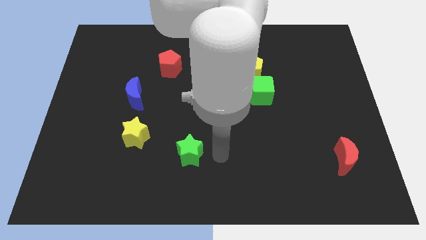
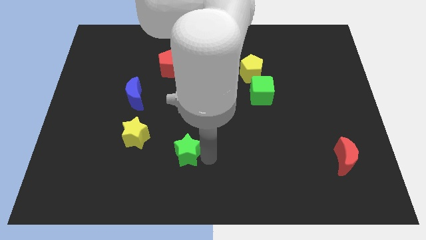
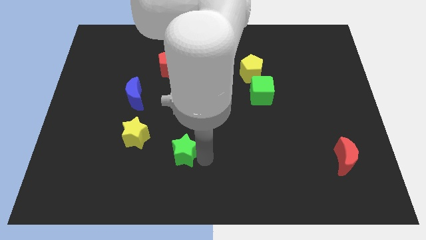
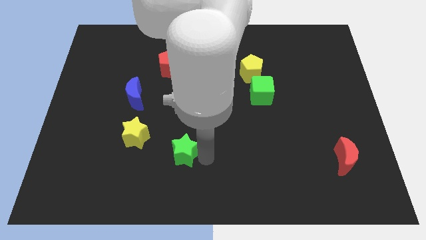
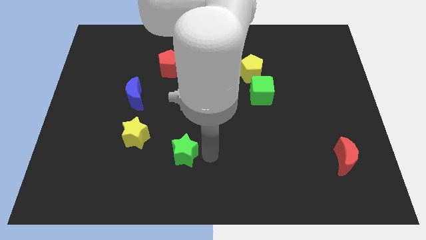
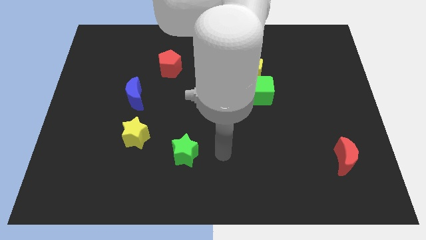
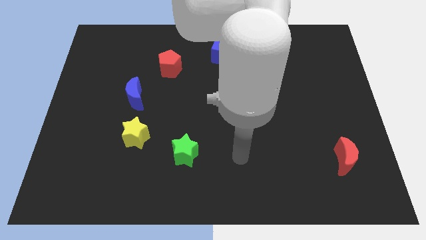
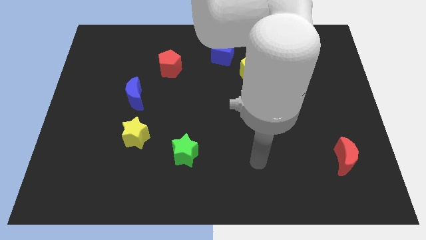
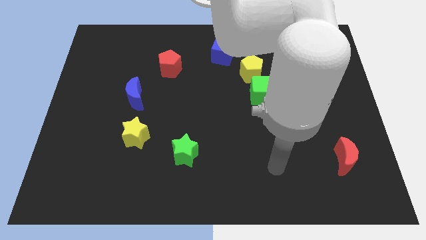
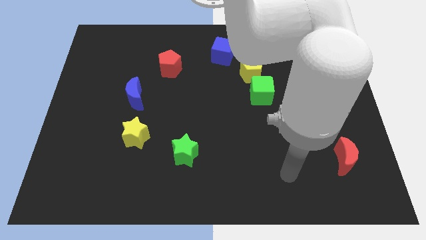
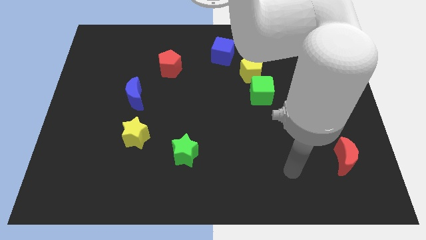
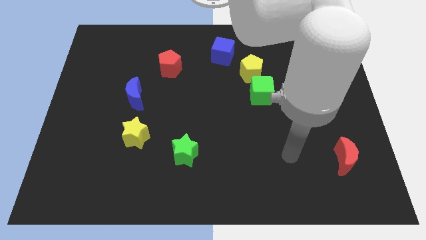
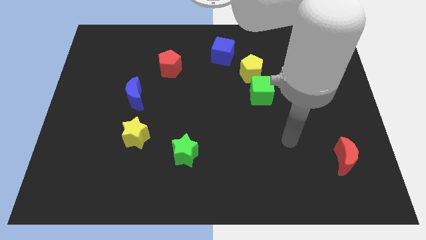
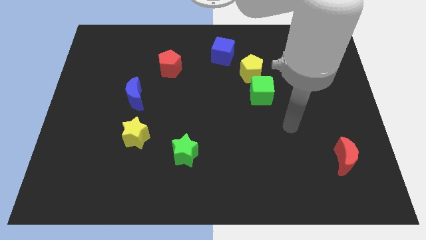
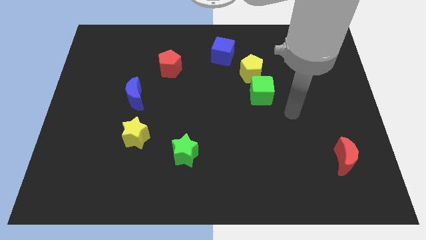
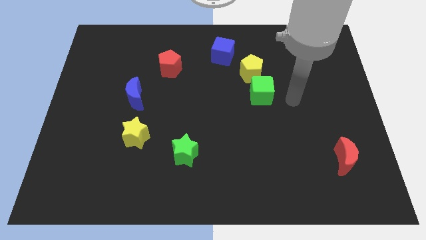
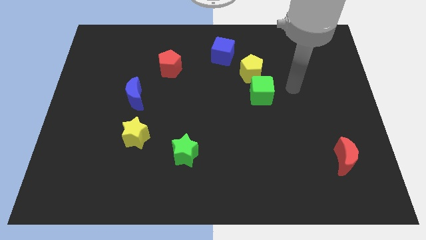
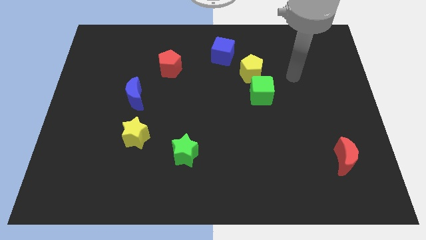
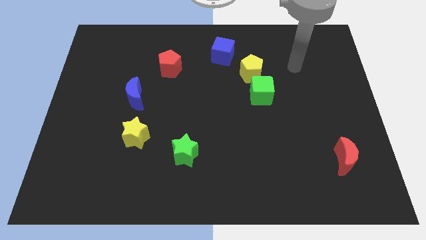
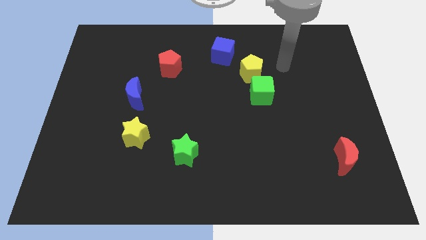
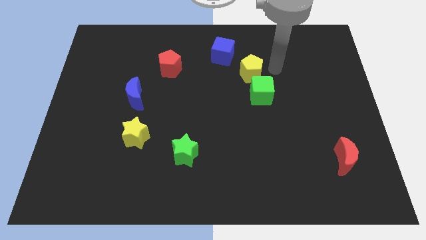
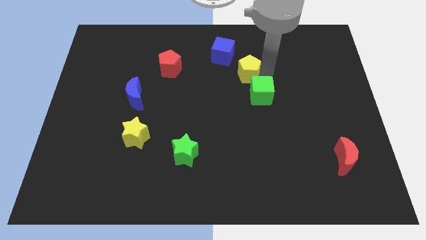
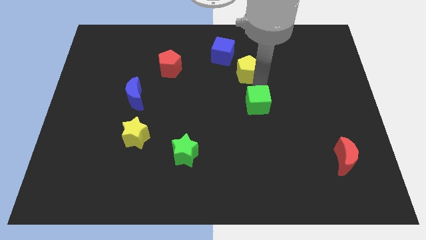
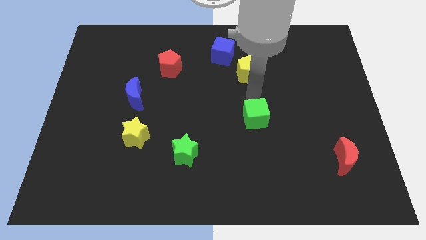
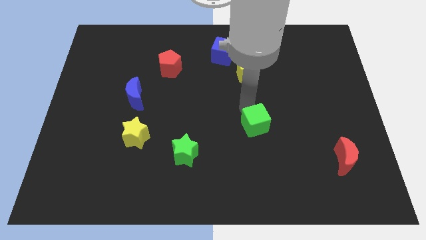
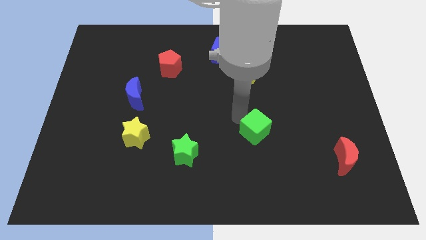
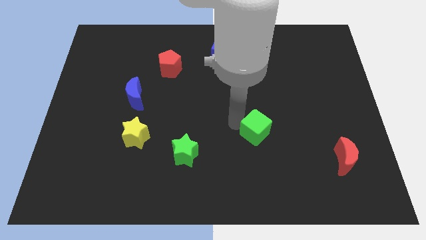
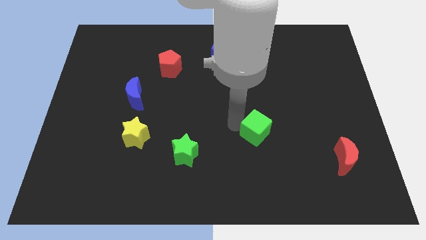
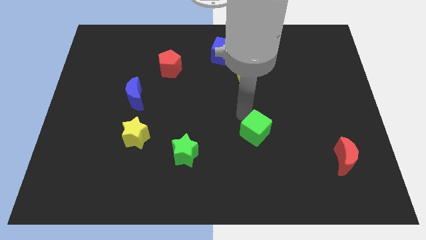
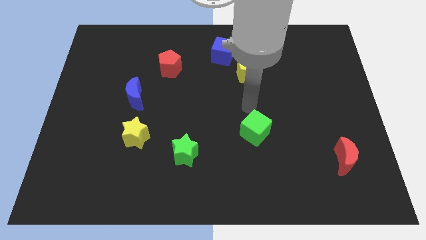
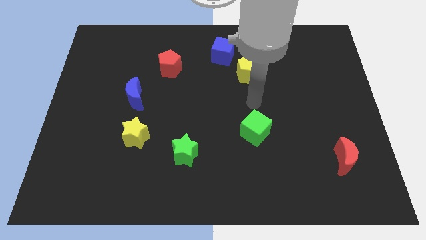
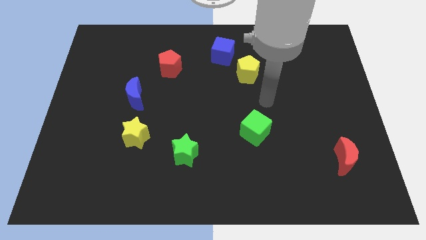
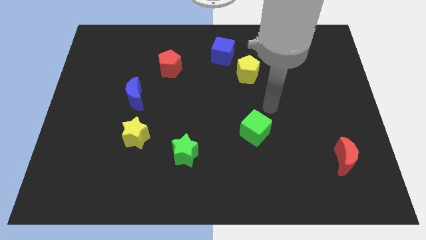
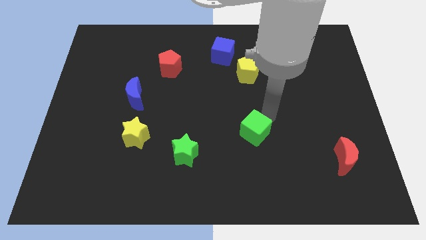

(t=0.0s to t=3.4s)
drag the green cube diagonally to red pentagon

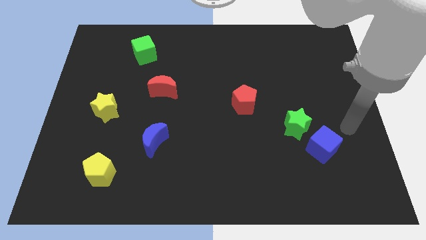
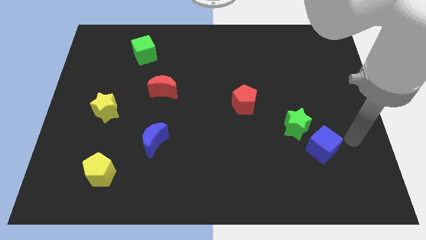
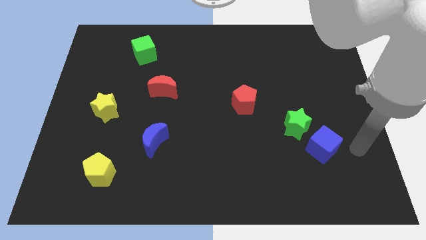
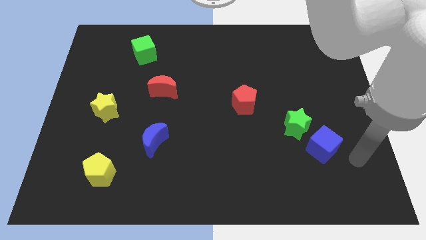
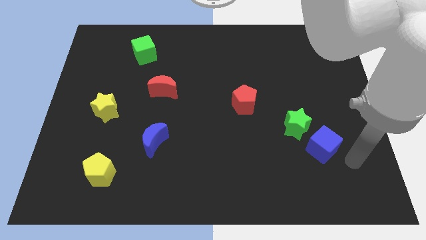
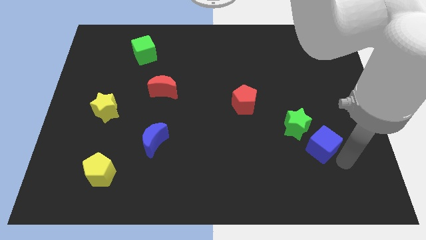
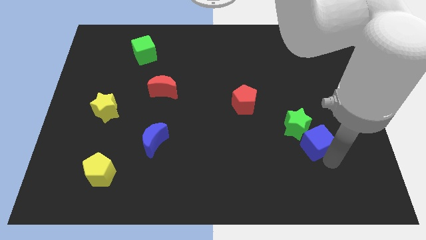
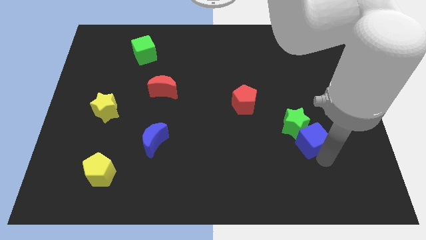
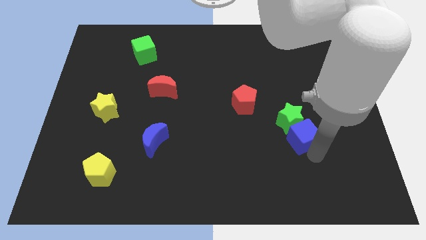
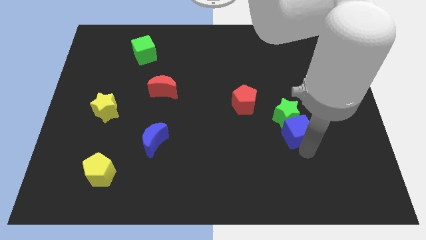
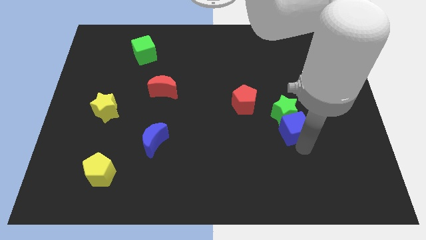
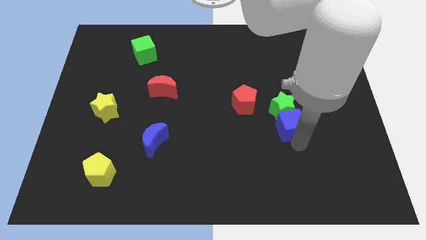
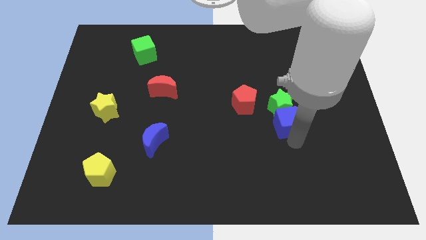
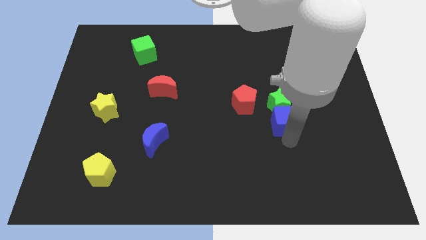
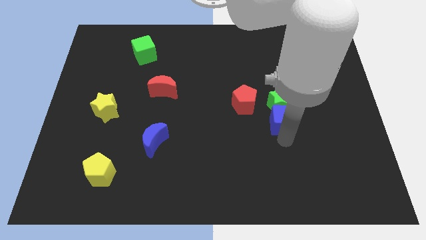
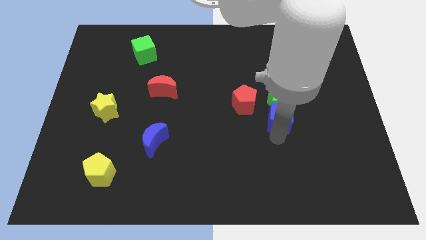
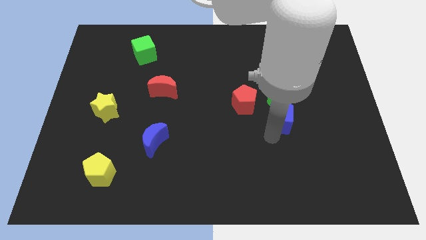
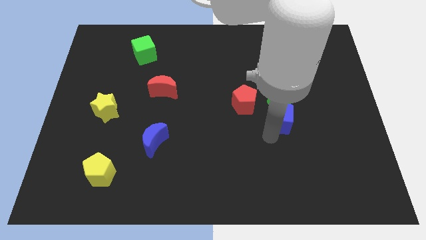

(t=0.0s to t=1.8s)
push the blue cube with green star towards red pentagon

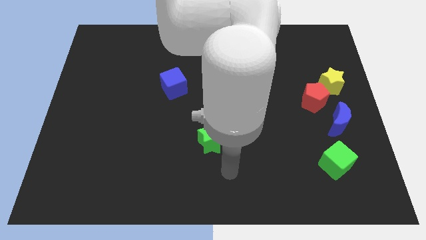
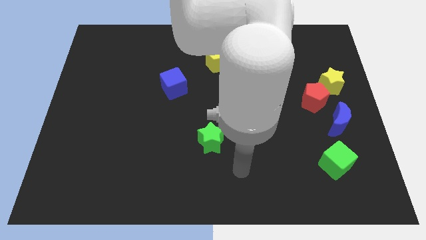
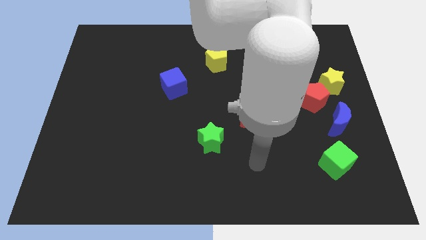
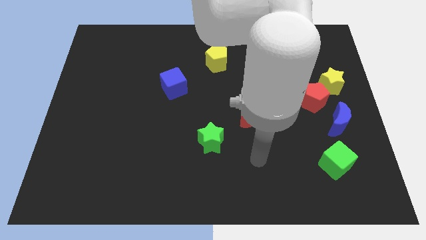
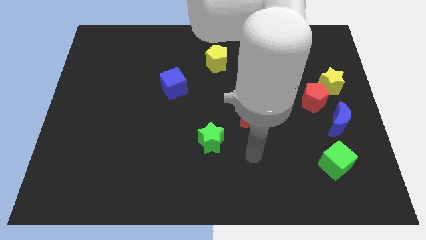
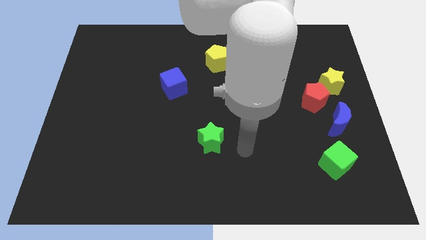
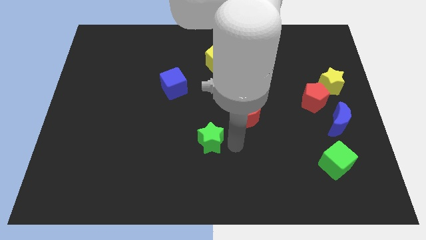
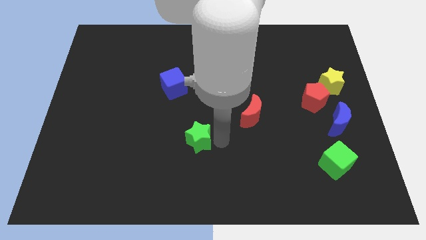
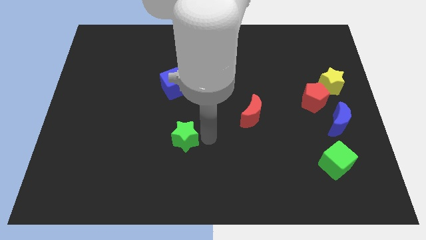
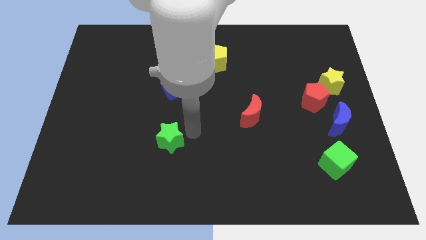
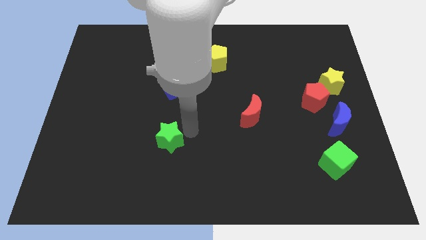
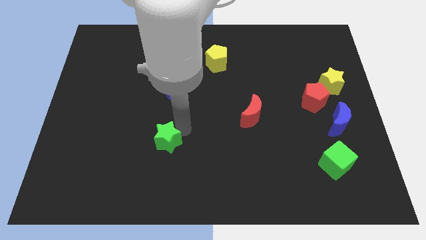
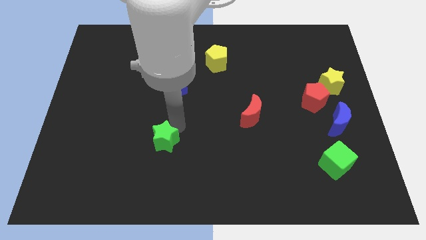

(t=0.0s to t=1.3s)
push the green star to the left

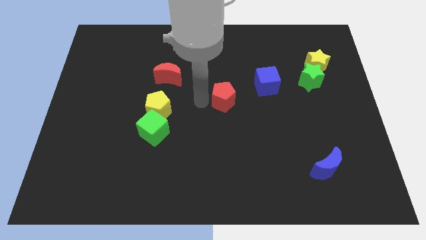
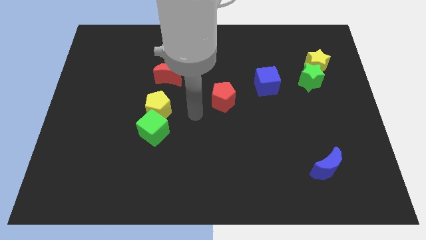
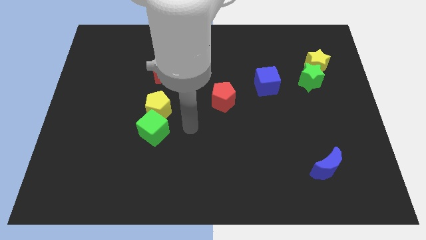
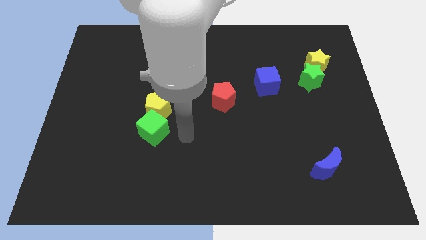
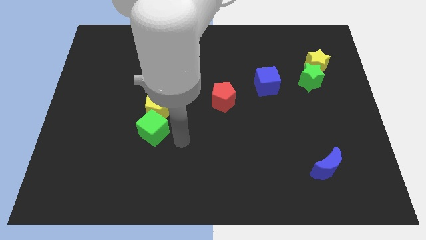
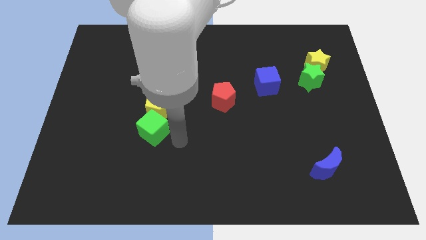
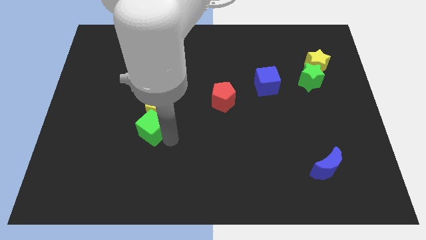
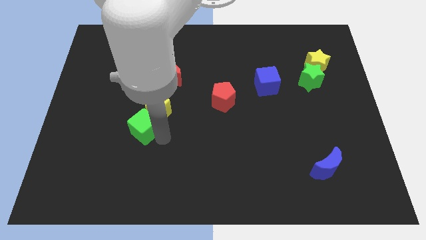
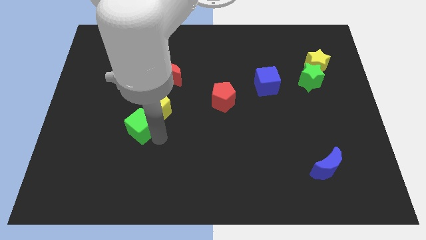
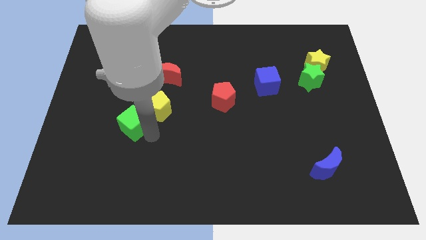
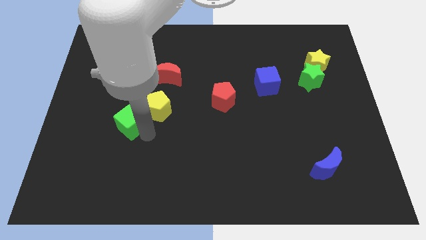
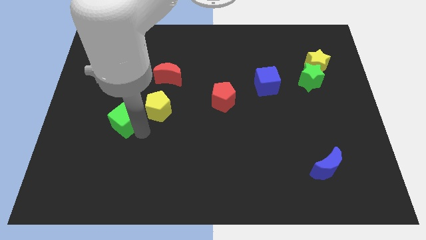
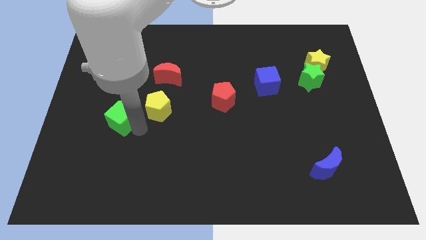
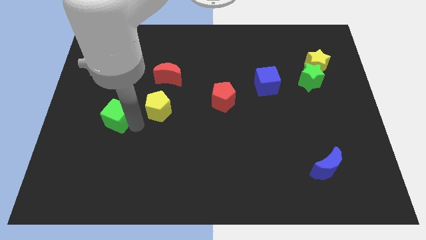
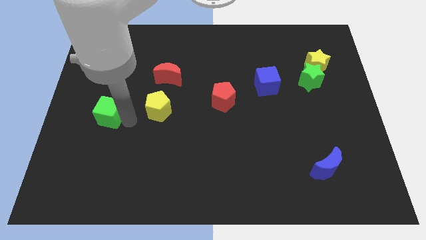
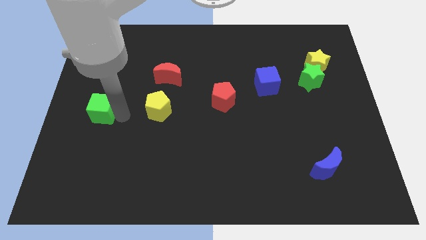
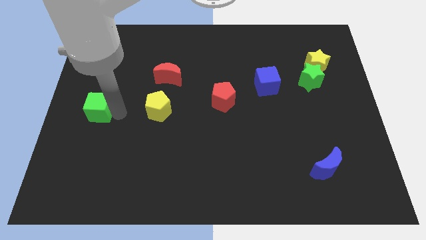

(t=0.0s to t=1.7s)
place the green cube to the left of the yellow pentagon

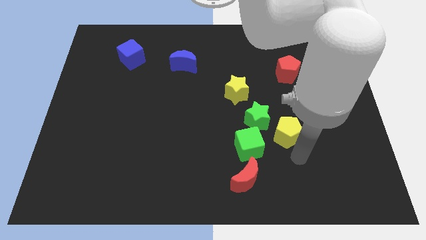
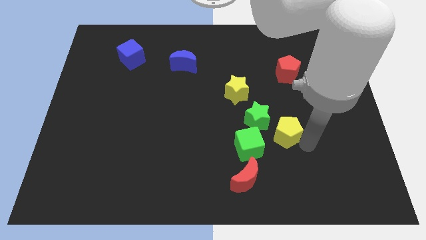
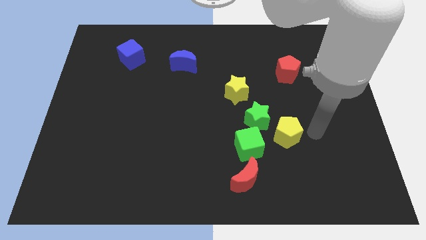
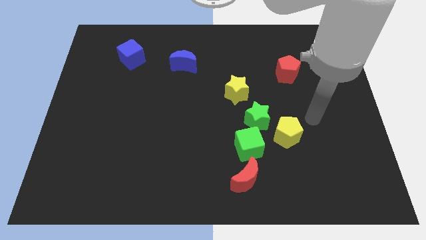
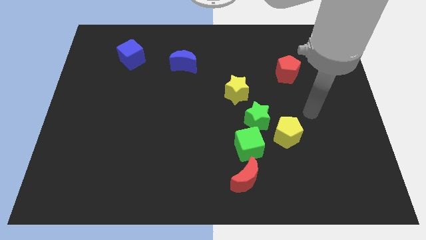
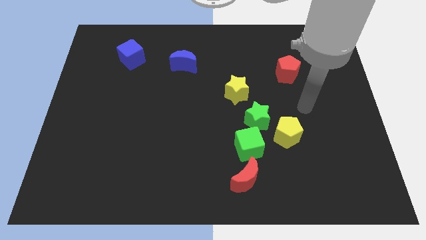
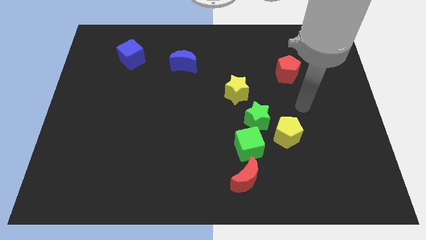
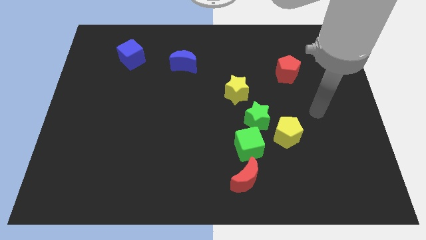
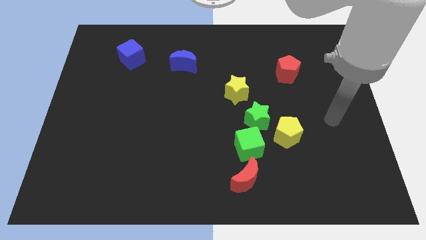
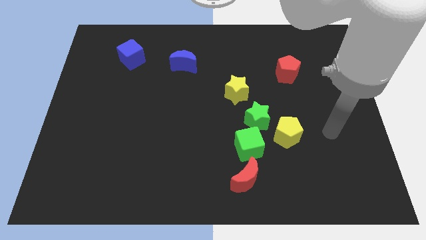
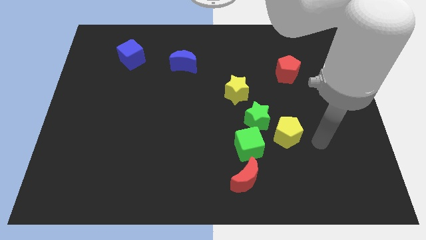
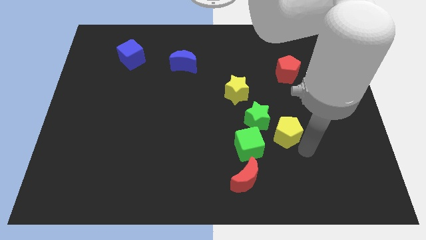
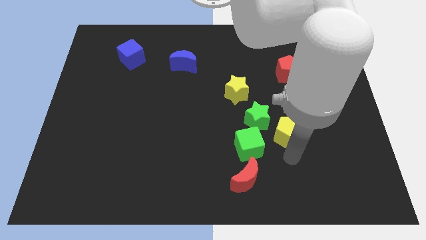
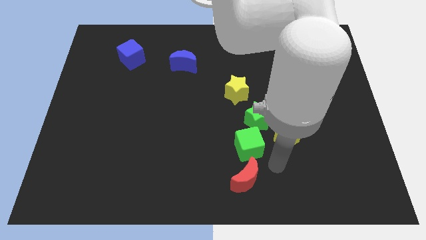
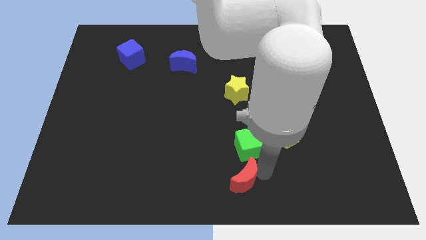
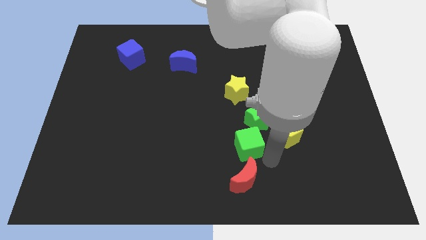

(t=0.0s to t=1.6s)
touch the red moon
